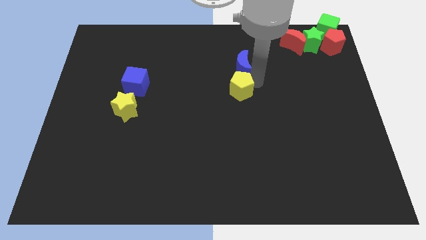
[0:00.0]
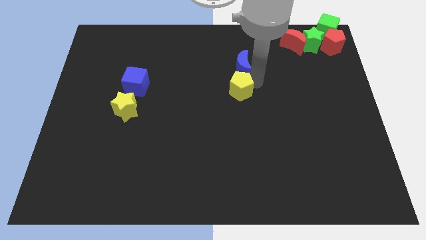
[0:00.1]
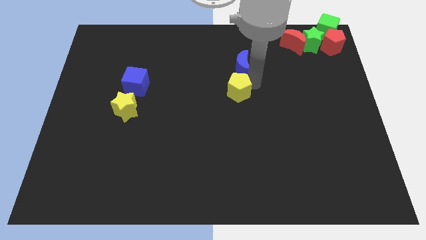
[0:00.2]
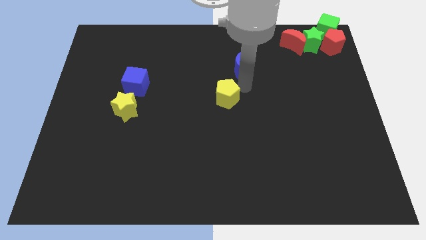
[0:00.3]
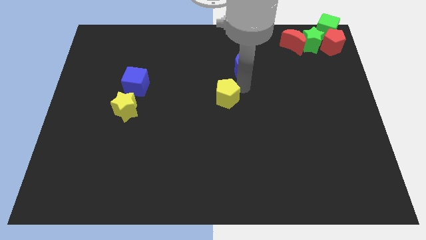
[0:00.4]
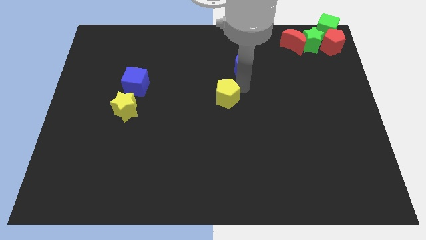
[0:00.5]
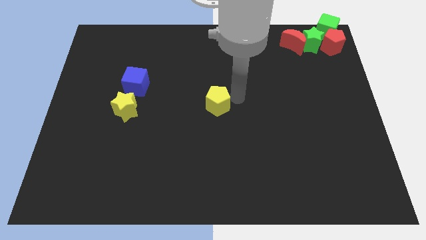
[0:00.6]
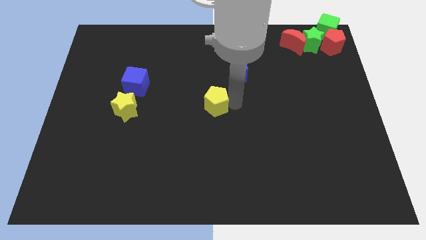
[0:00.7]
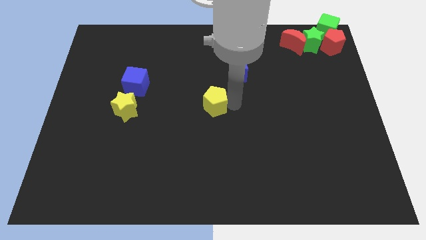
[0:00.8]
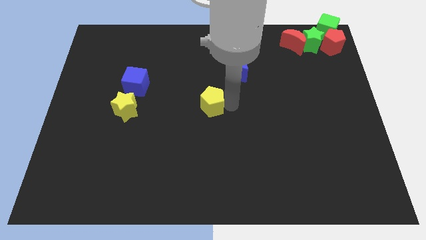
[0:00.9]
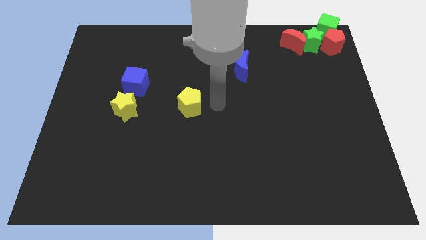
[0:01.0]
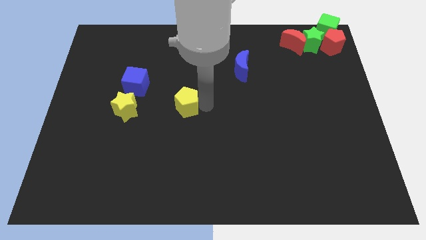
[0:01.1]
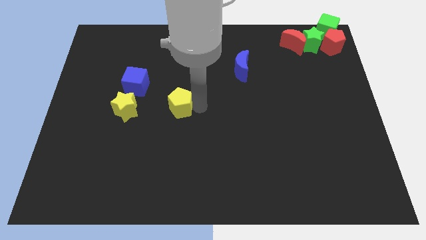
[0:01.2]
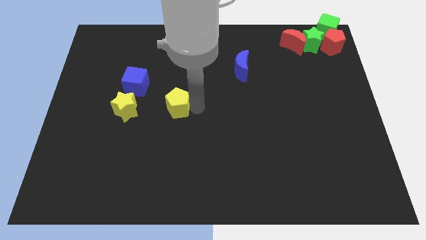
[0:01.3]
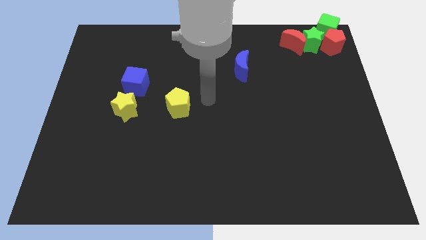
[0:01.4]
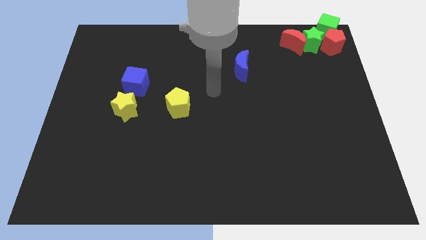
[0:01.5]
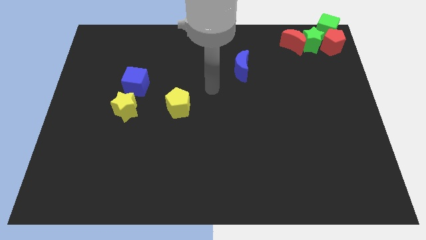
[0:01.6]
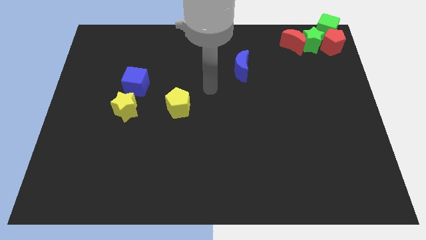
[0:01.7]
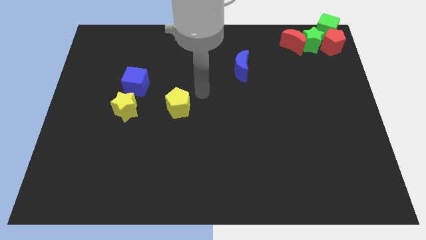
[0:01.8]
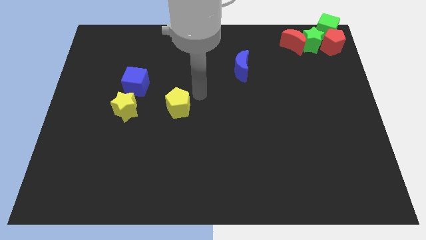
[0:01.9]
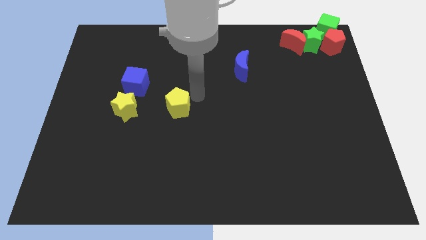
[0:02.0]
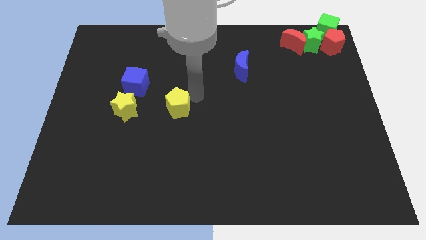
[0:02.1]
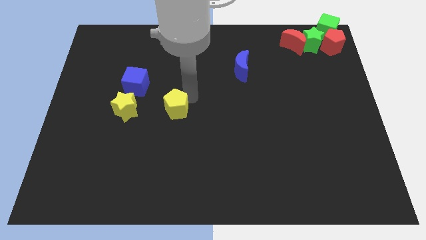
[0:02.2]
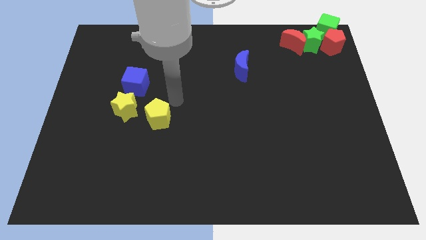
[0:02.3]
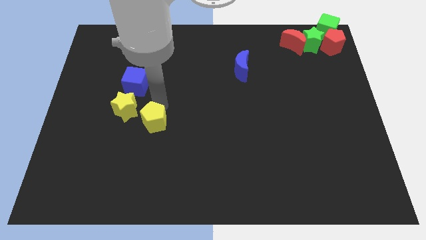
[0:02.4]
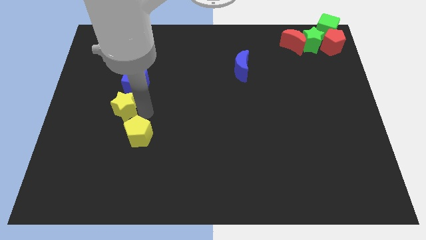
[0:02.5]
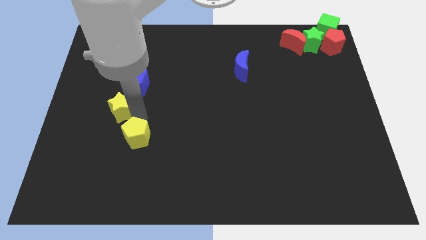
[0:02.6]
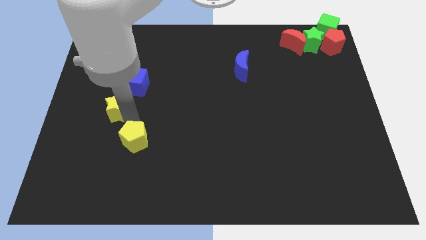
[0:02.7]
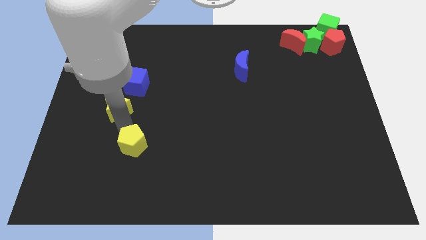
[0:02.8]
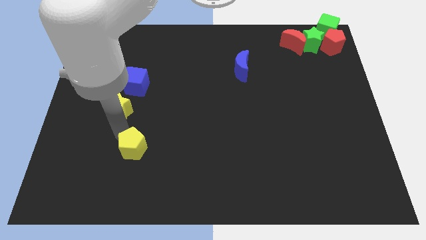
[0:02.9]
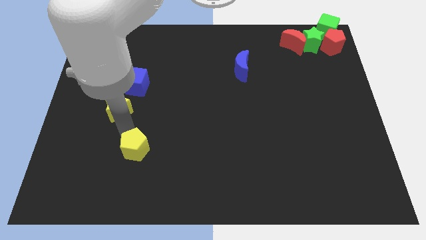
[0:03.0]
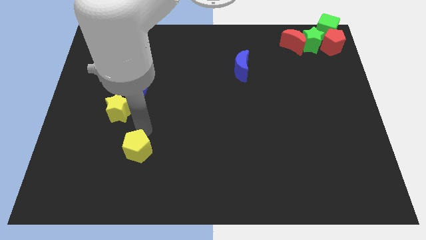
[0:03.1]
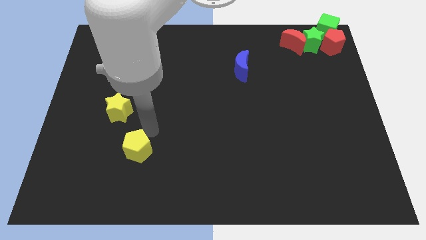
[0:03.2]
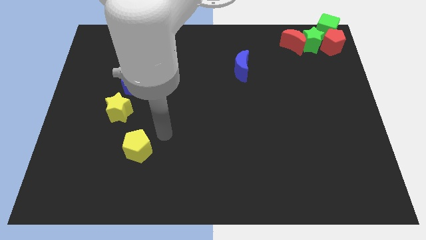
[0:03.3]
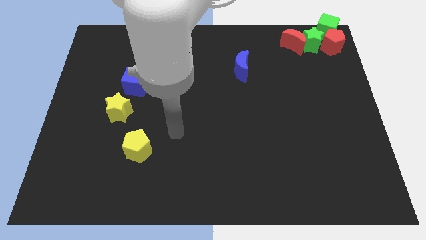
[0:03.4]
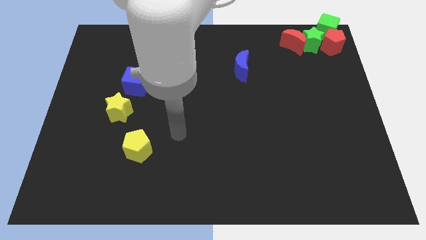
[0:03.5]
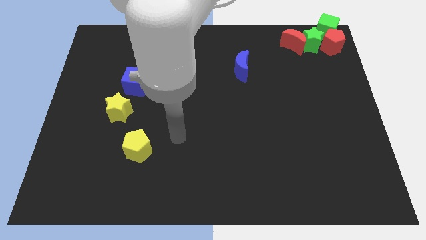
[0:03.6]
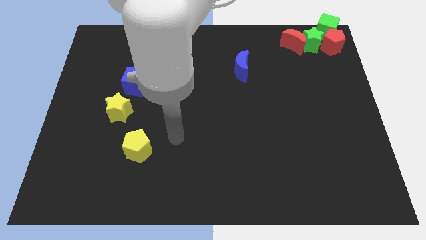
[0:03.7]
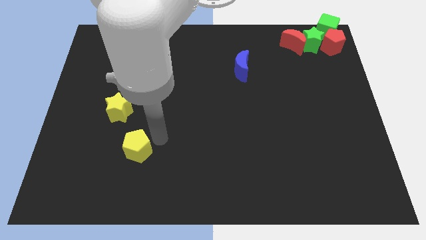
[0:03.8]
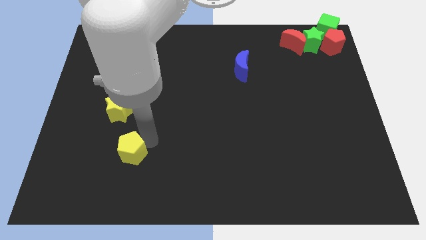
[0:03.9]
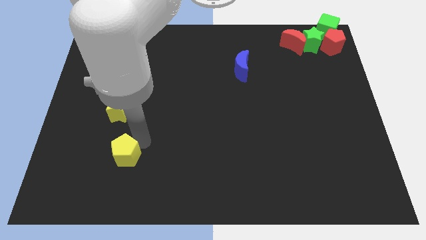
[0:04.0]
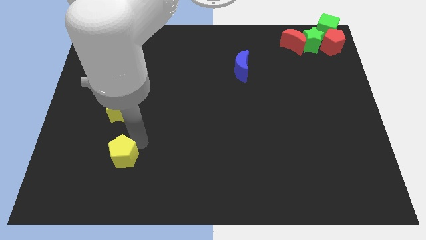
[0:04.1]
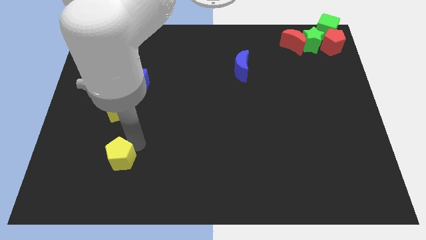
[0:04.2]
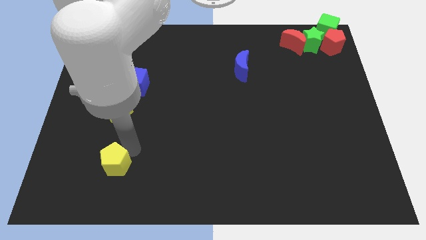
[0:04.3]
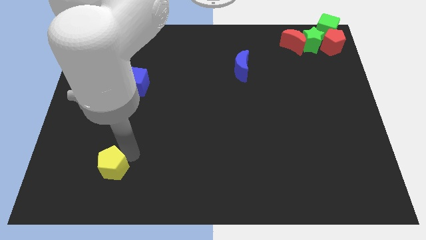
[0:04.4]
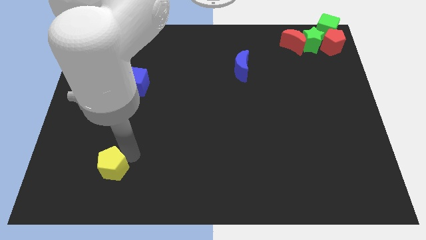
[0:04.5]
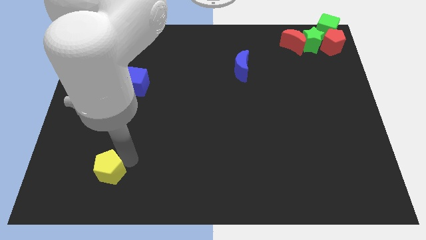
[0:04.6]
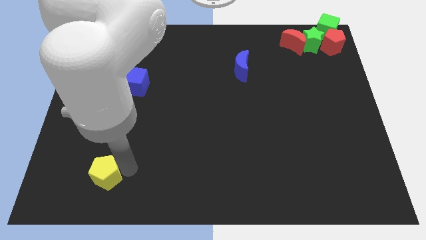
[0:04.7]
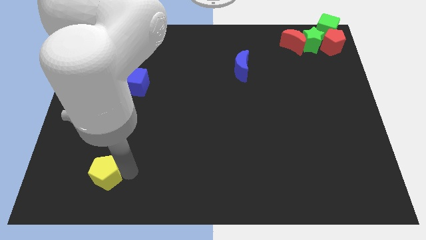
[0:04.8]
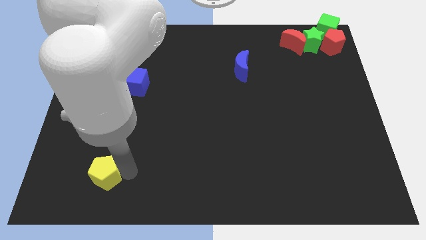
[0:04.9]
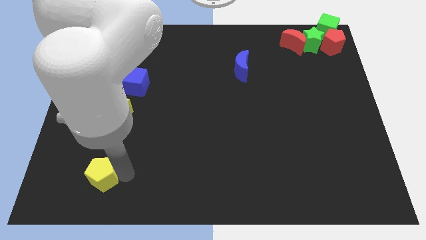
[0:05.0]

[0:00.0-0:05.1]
slide yellow pentagon below yellow star

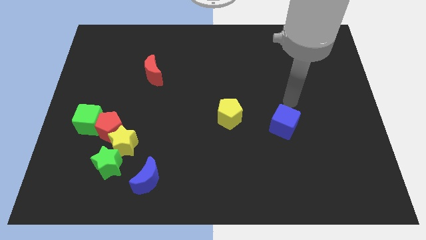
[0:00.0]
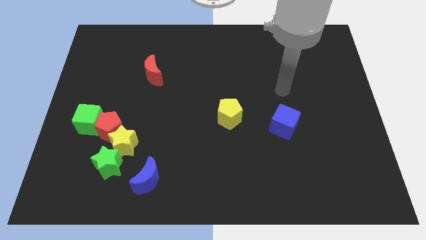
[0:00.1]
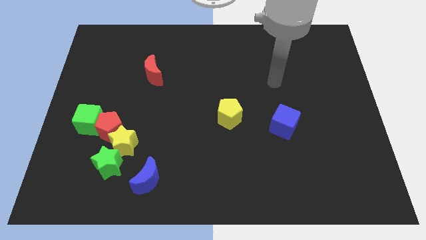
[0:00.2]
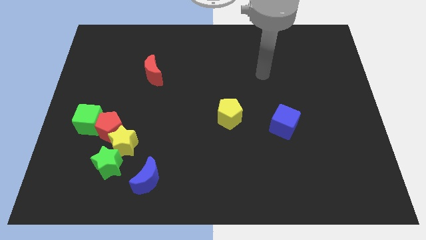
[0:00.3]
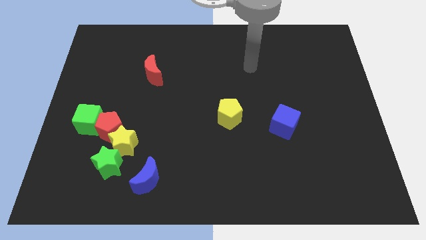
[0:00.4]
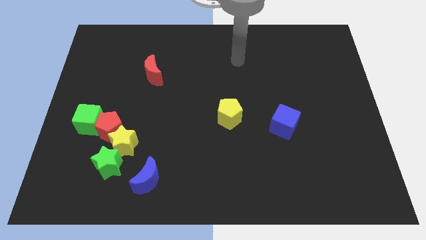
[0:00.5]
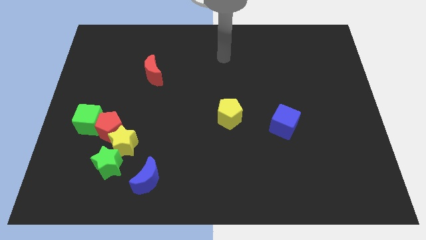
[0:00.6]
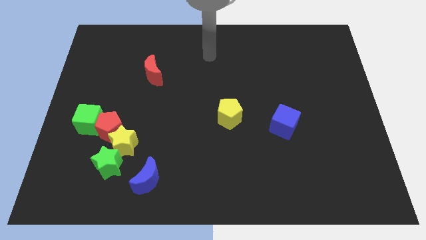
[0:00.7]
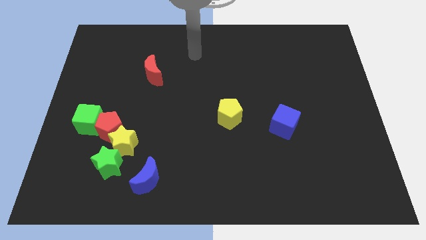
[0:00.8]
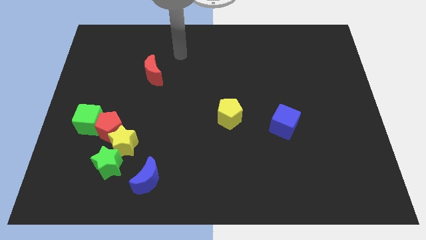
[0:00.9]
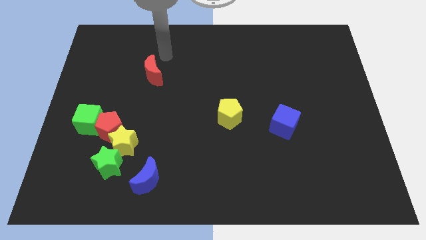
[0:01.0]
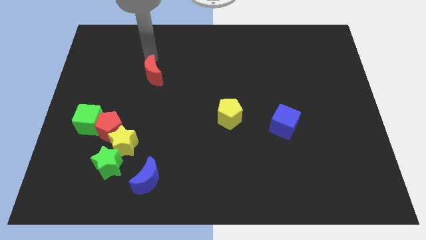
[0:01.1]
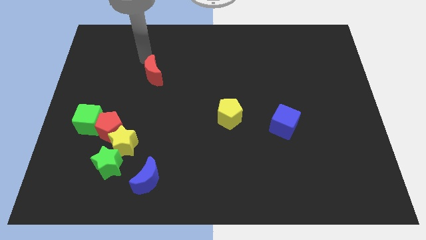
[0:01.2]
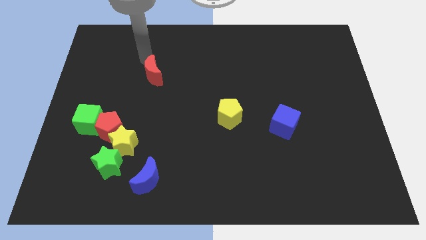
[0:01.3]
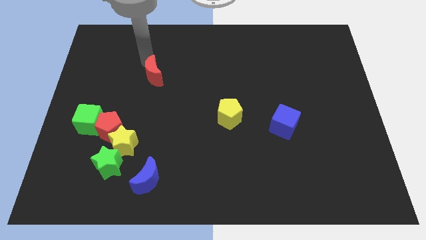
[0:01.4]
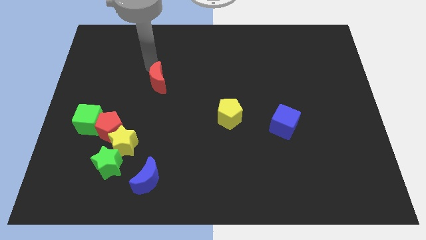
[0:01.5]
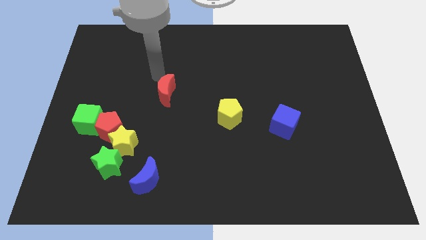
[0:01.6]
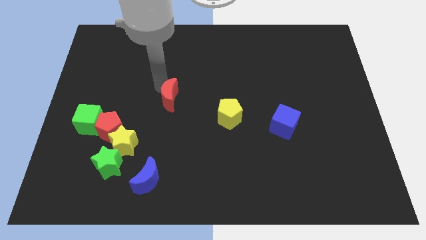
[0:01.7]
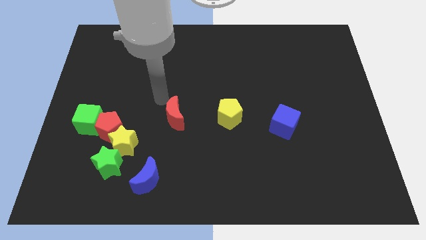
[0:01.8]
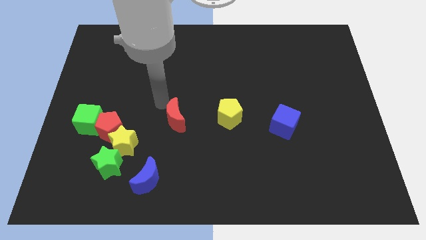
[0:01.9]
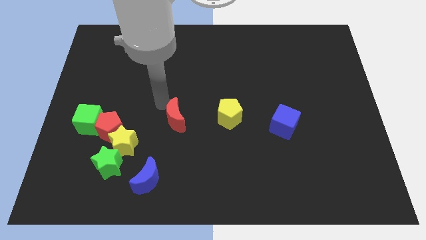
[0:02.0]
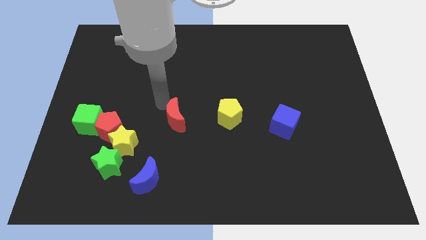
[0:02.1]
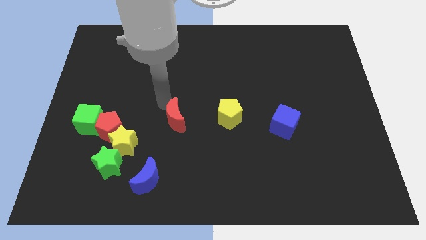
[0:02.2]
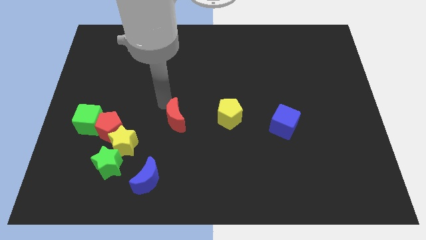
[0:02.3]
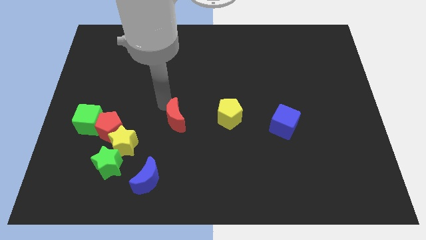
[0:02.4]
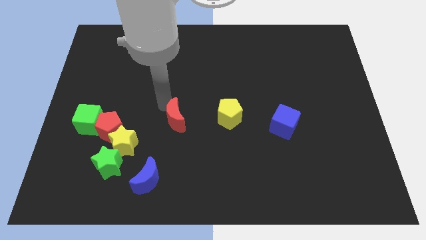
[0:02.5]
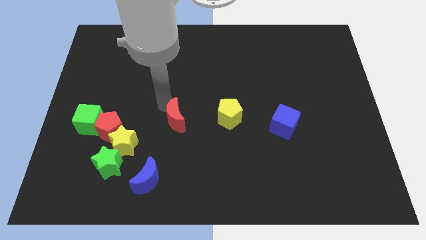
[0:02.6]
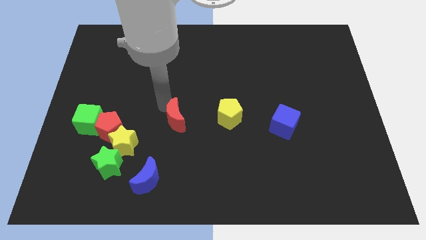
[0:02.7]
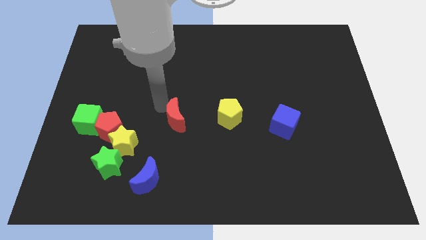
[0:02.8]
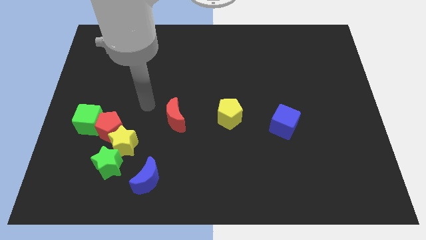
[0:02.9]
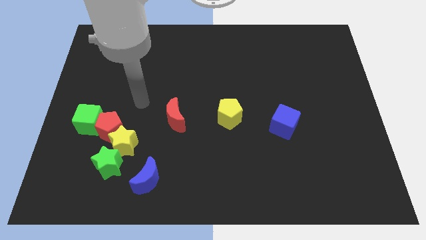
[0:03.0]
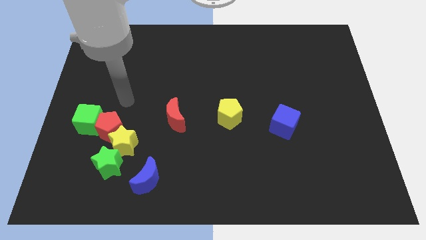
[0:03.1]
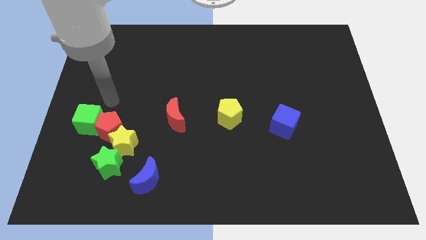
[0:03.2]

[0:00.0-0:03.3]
place the red crescent to the left of the yellow pentagon

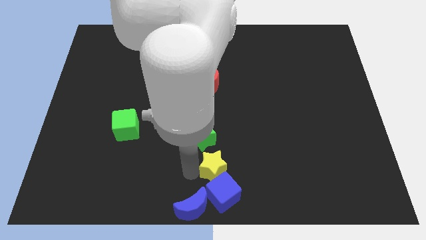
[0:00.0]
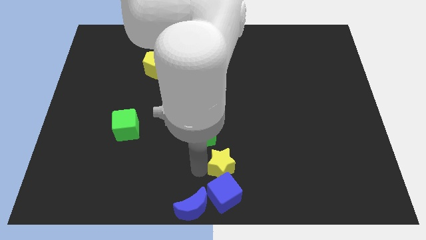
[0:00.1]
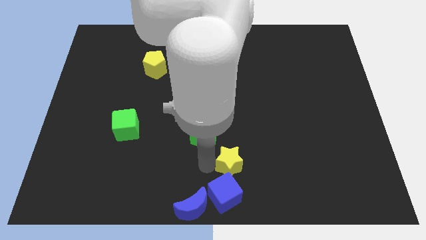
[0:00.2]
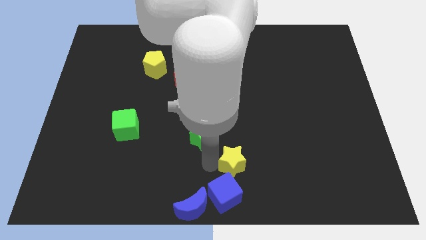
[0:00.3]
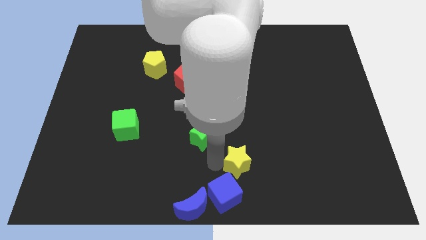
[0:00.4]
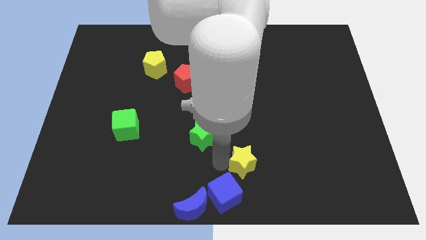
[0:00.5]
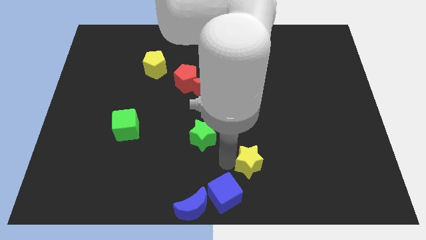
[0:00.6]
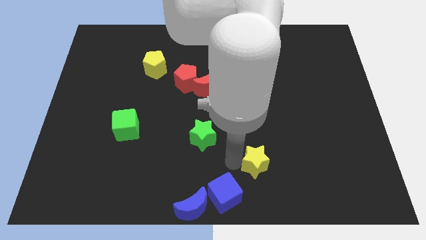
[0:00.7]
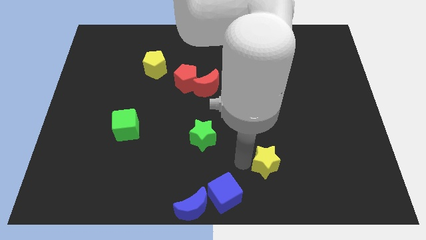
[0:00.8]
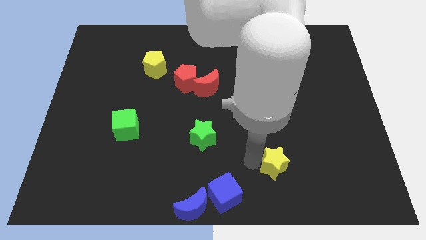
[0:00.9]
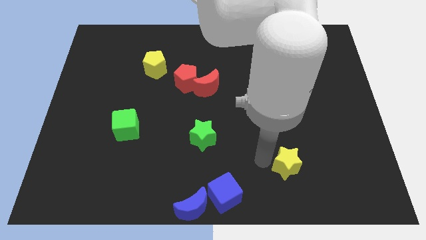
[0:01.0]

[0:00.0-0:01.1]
separate yellow star from blue cube
